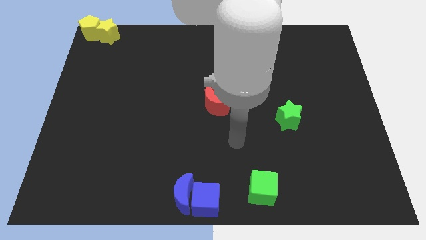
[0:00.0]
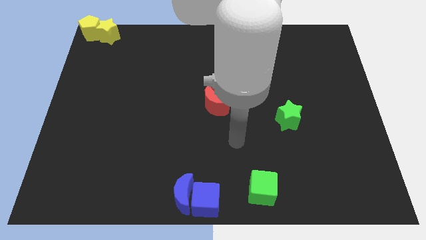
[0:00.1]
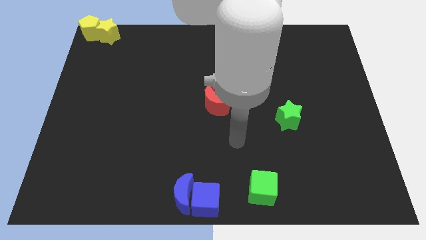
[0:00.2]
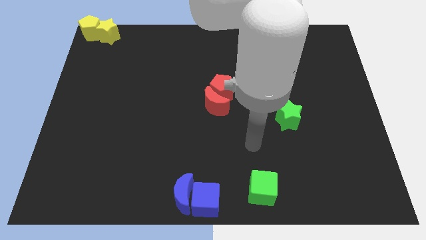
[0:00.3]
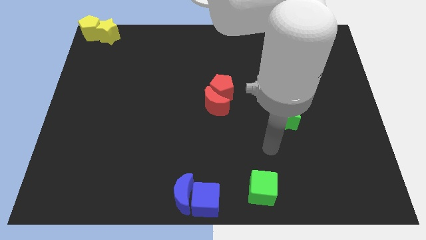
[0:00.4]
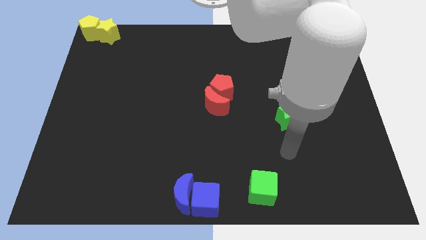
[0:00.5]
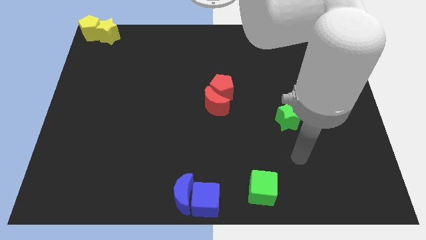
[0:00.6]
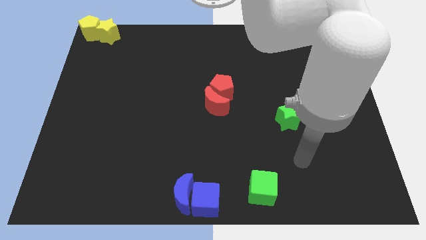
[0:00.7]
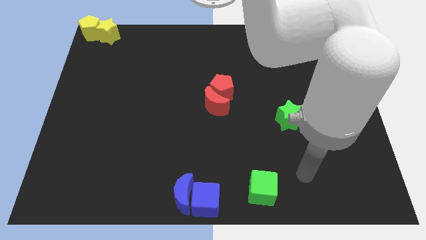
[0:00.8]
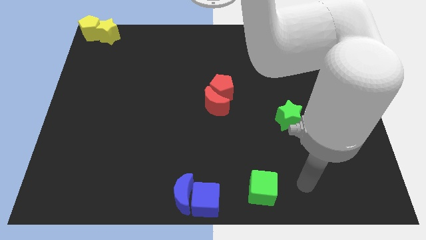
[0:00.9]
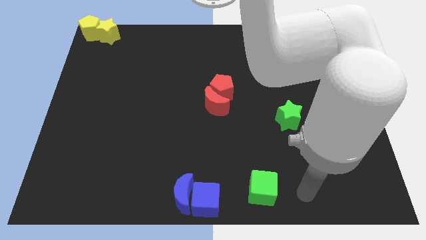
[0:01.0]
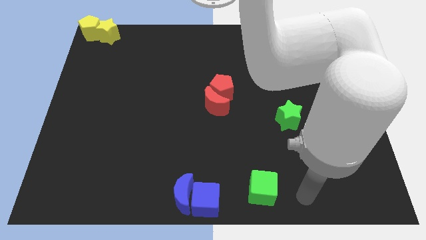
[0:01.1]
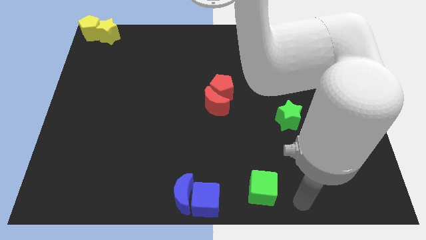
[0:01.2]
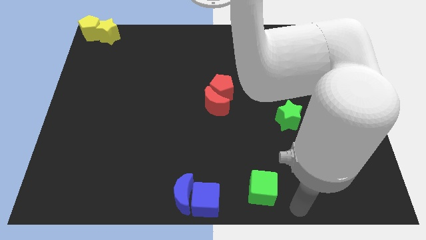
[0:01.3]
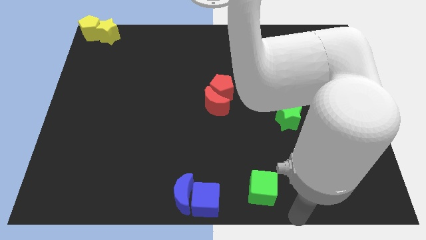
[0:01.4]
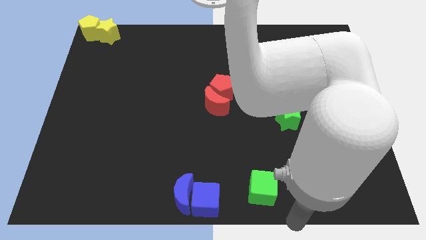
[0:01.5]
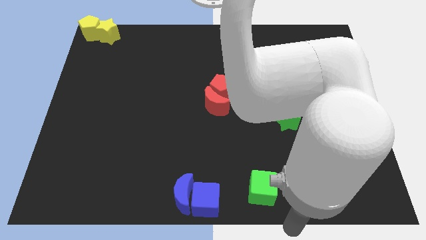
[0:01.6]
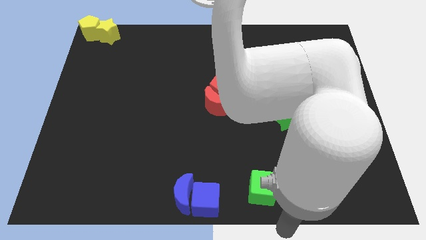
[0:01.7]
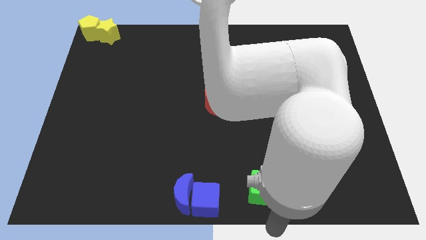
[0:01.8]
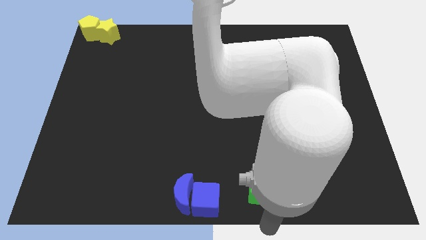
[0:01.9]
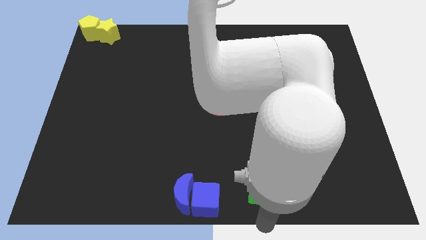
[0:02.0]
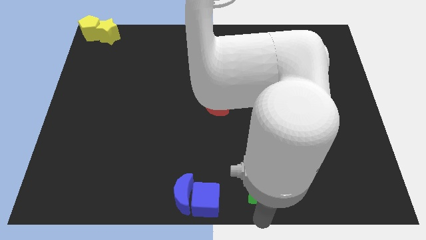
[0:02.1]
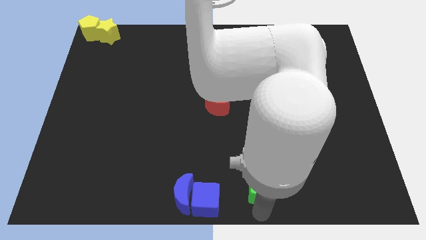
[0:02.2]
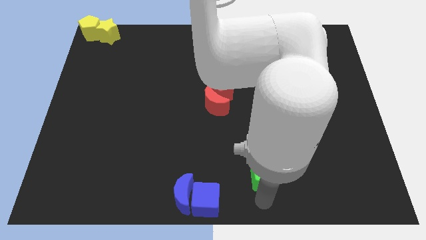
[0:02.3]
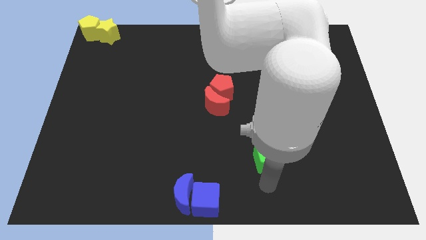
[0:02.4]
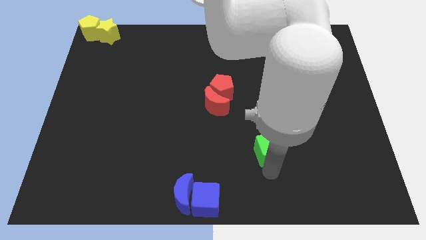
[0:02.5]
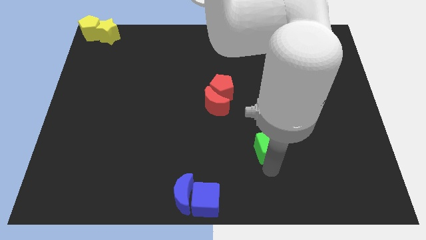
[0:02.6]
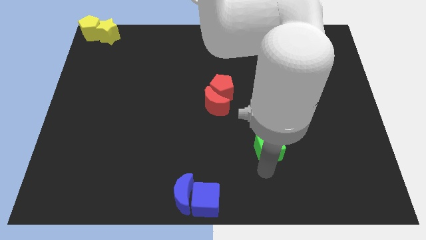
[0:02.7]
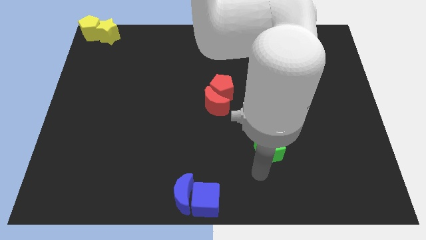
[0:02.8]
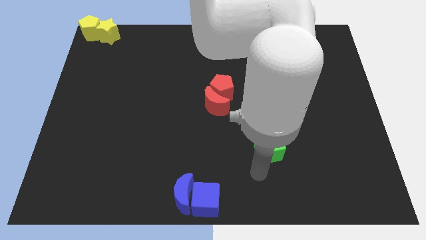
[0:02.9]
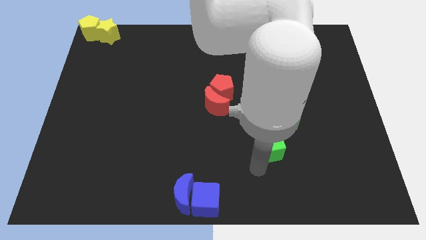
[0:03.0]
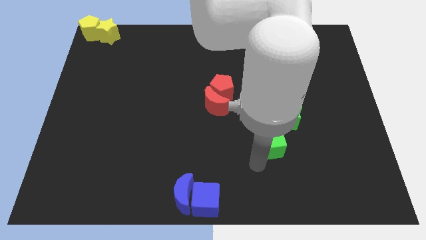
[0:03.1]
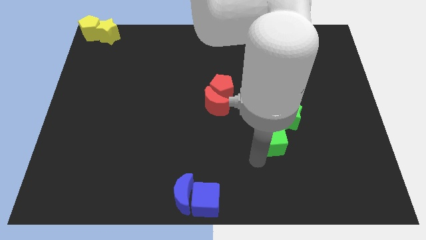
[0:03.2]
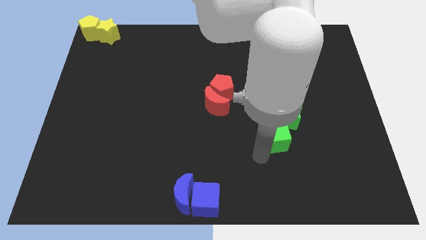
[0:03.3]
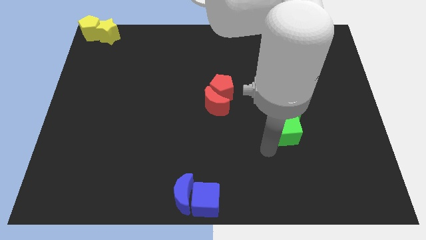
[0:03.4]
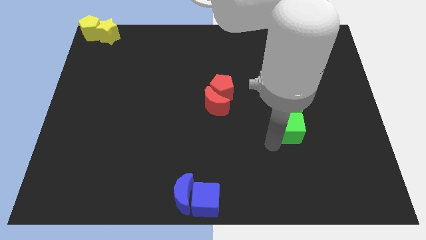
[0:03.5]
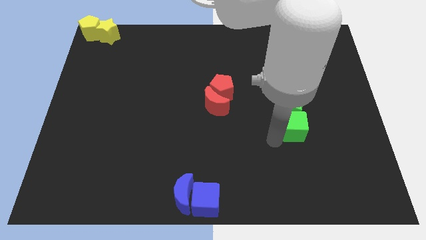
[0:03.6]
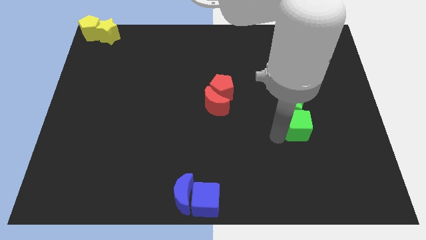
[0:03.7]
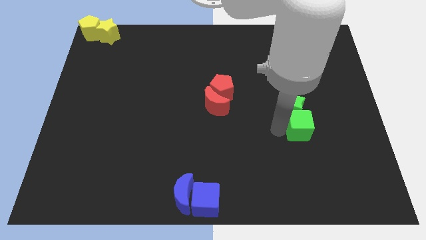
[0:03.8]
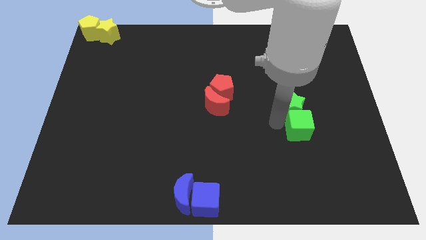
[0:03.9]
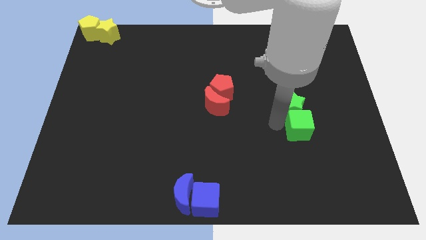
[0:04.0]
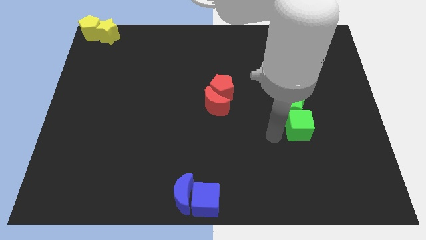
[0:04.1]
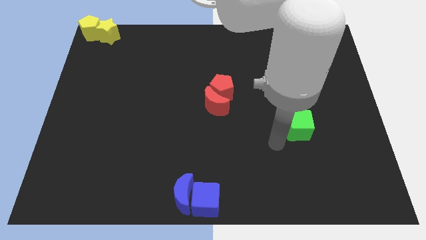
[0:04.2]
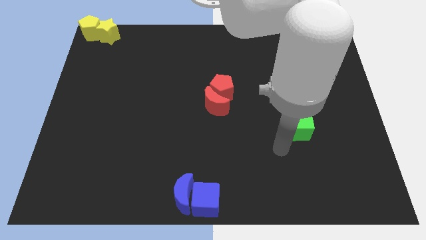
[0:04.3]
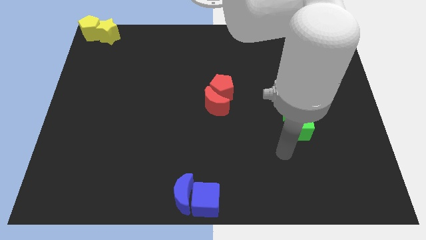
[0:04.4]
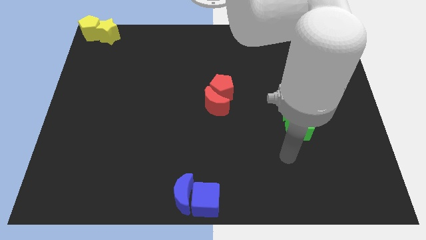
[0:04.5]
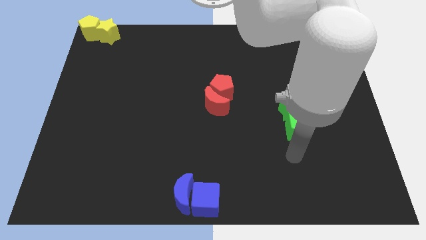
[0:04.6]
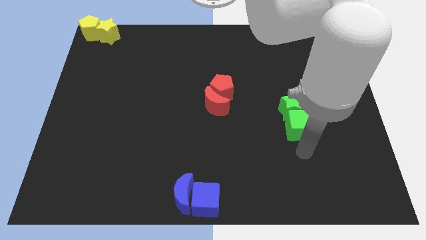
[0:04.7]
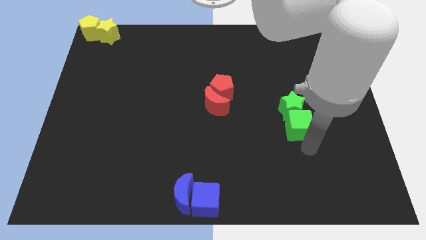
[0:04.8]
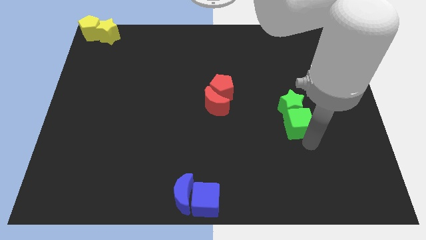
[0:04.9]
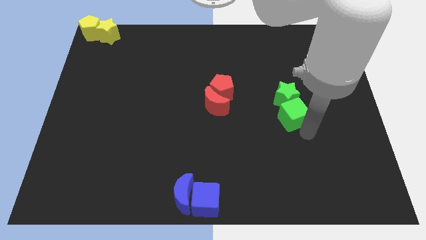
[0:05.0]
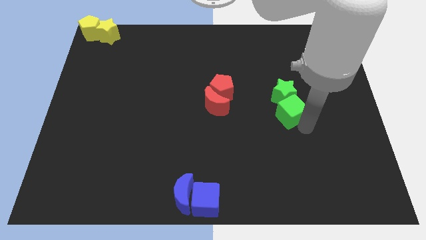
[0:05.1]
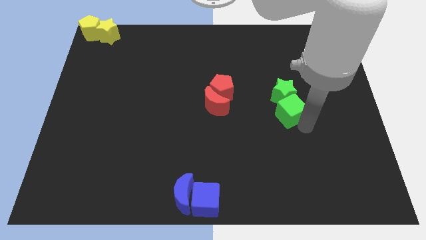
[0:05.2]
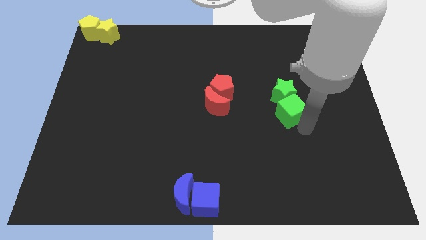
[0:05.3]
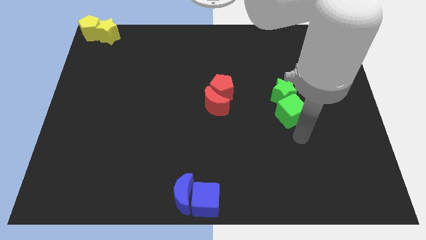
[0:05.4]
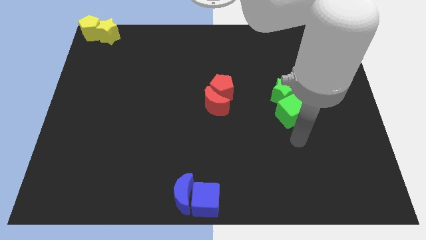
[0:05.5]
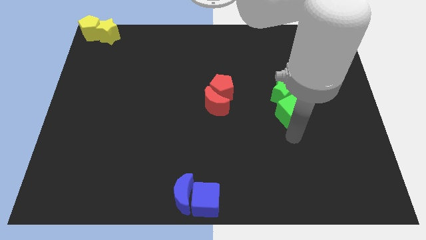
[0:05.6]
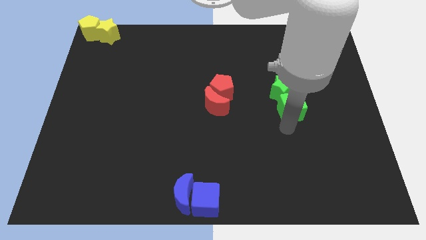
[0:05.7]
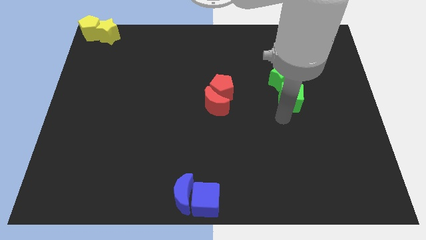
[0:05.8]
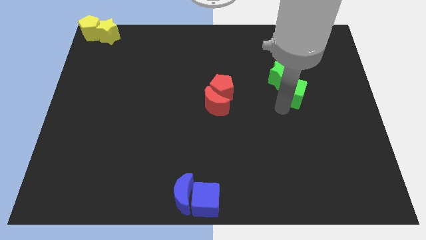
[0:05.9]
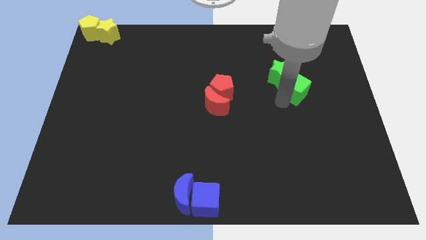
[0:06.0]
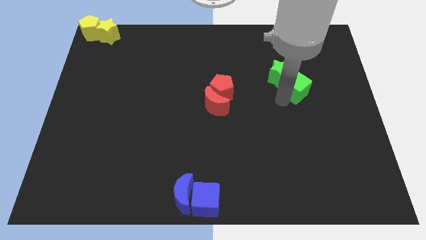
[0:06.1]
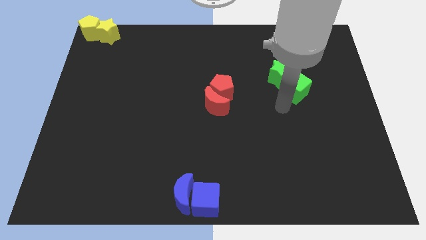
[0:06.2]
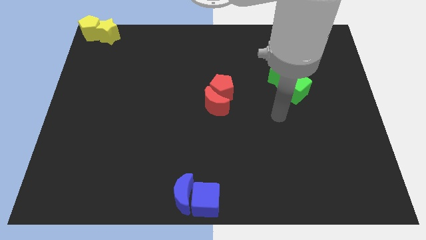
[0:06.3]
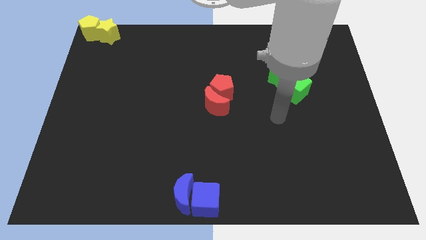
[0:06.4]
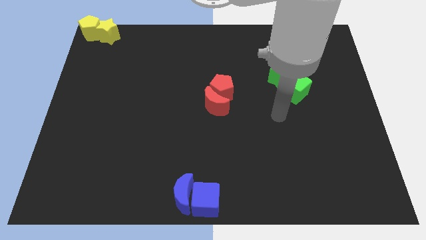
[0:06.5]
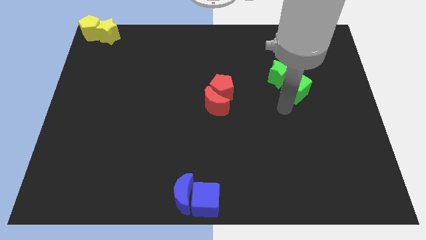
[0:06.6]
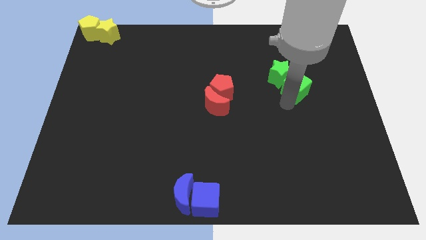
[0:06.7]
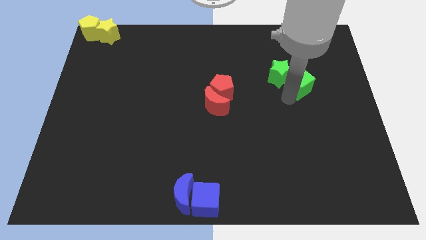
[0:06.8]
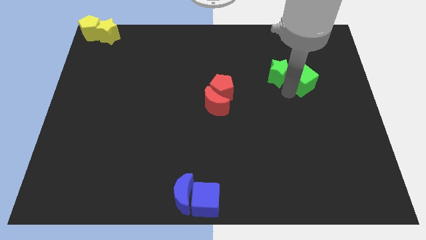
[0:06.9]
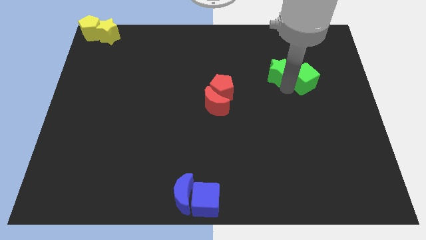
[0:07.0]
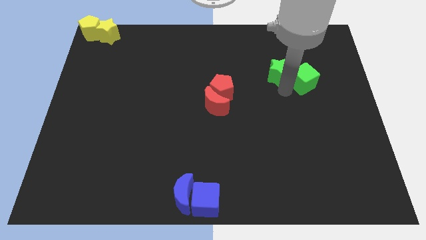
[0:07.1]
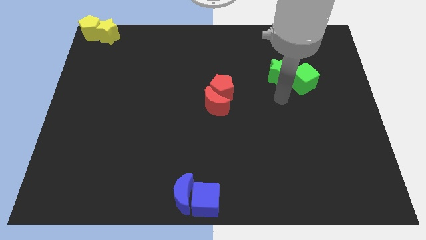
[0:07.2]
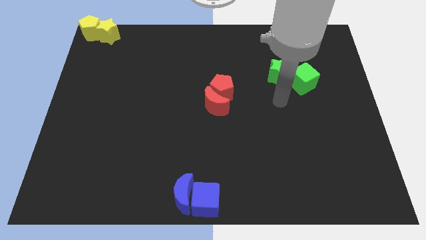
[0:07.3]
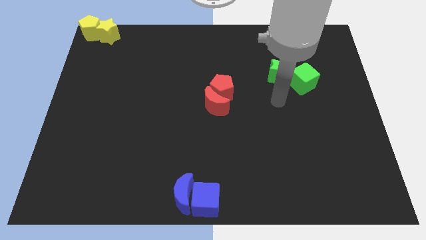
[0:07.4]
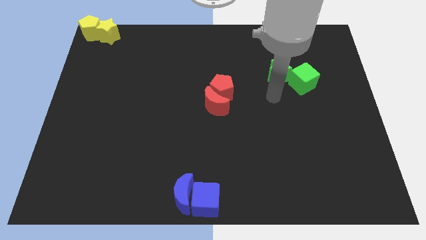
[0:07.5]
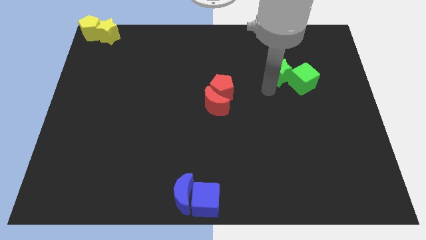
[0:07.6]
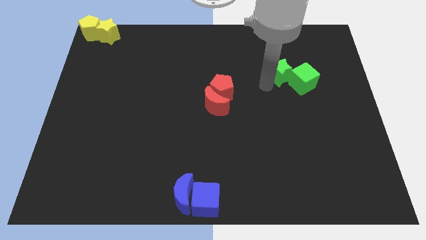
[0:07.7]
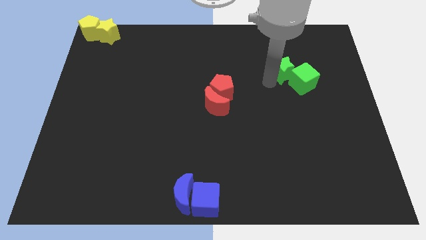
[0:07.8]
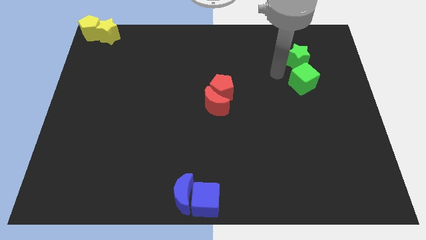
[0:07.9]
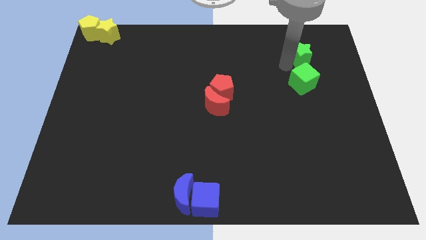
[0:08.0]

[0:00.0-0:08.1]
move the green star green cube upwards

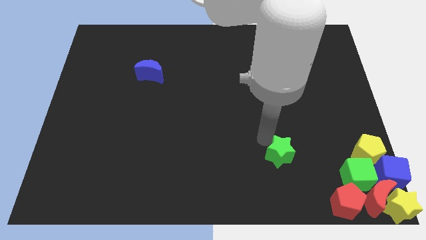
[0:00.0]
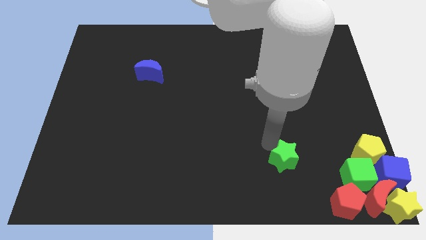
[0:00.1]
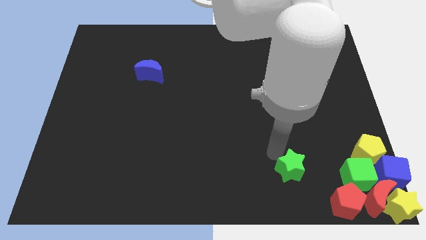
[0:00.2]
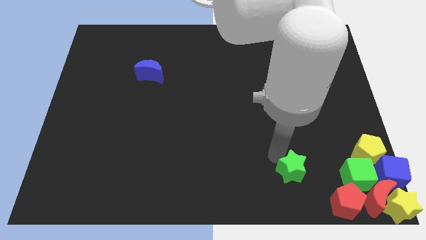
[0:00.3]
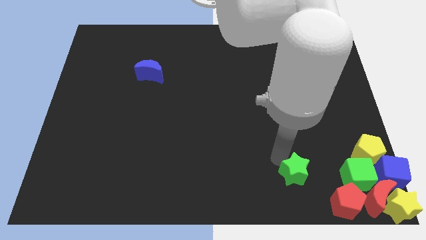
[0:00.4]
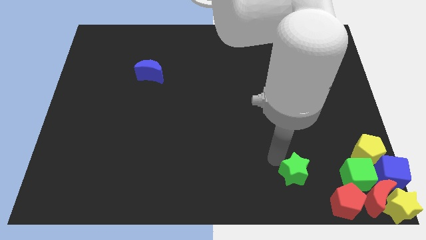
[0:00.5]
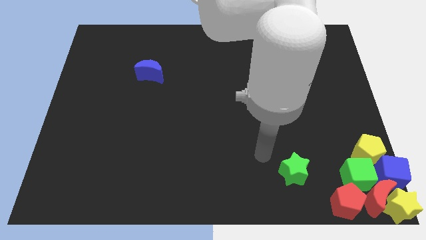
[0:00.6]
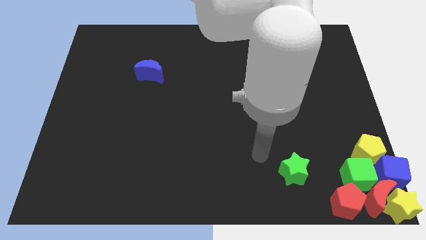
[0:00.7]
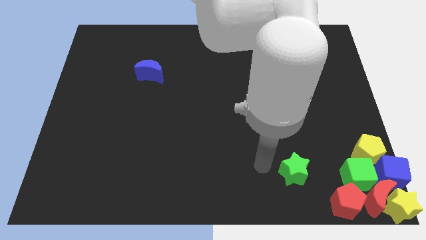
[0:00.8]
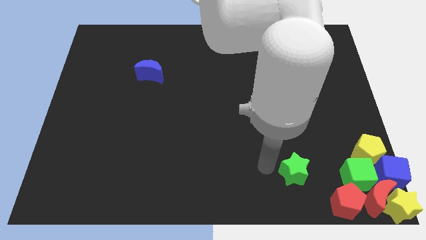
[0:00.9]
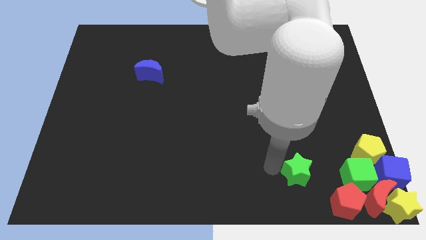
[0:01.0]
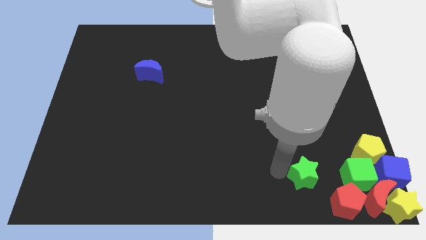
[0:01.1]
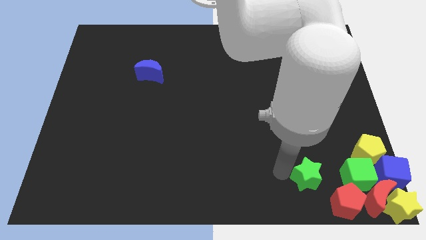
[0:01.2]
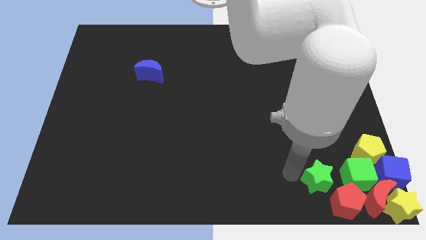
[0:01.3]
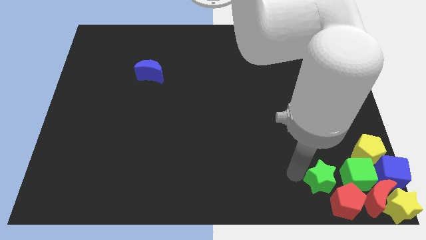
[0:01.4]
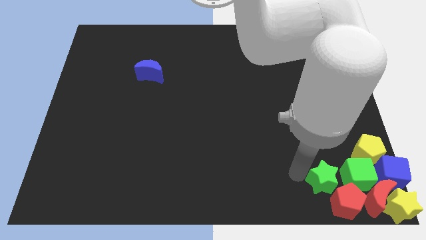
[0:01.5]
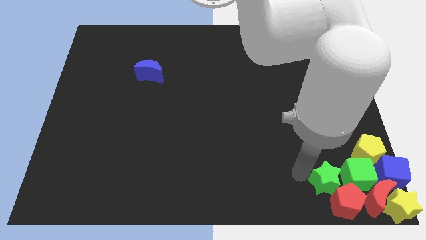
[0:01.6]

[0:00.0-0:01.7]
push green star opposite green cube
